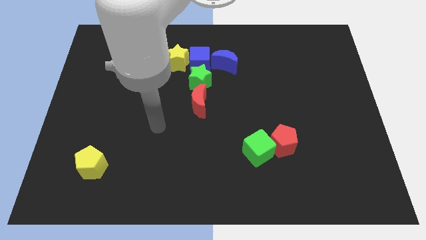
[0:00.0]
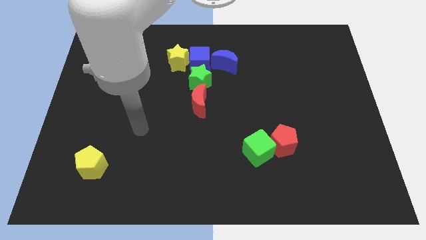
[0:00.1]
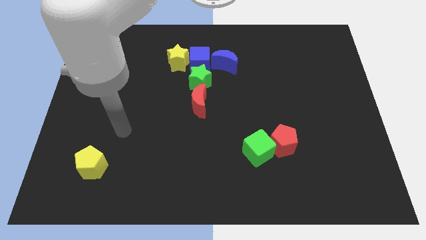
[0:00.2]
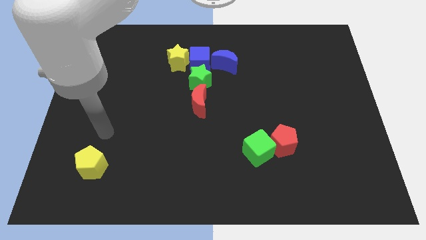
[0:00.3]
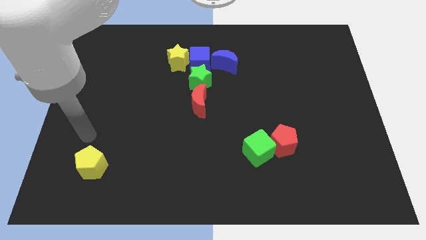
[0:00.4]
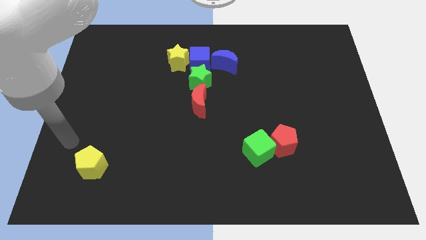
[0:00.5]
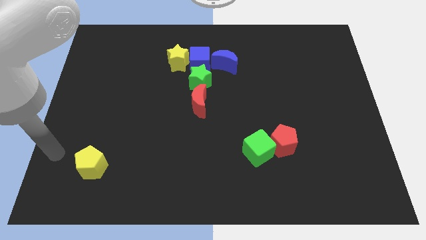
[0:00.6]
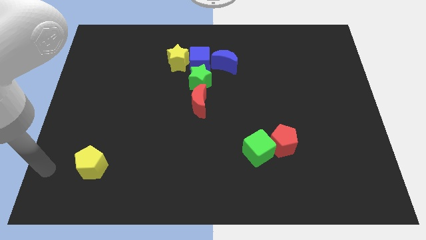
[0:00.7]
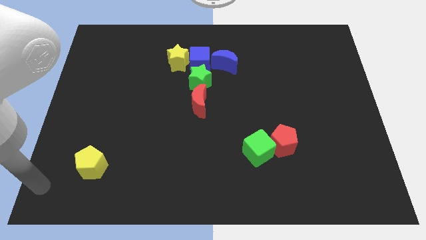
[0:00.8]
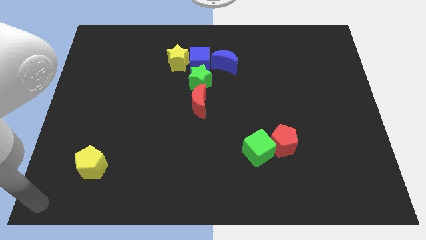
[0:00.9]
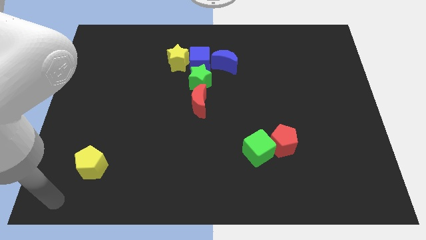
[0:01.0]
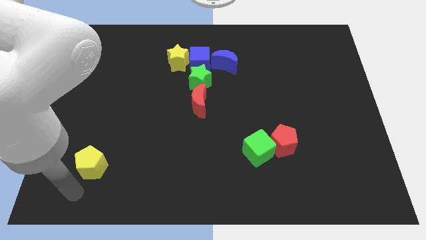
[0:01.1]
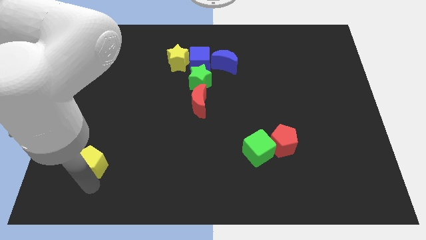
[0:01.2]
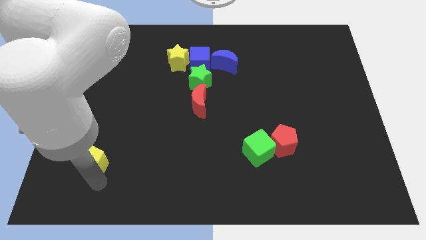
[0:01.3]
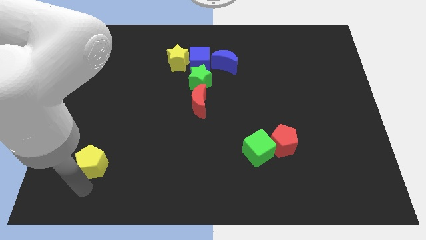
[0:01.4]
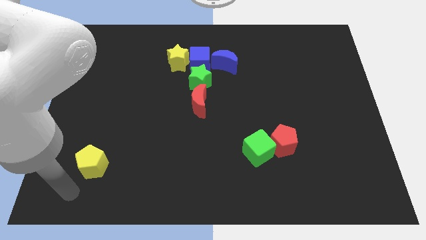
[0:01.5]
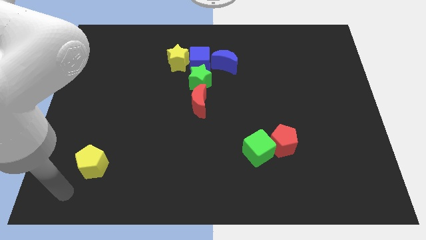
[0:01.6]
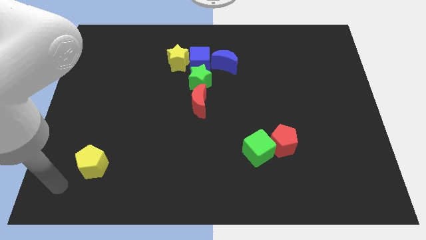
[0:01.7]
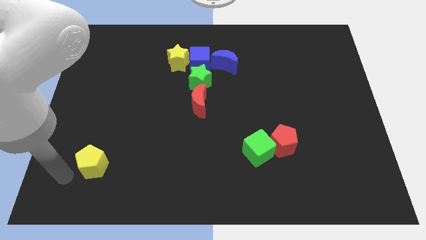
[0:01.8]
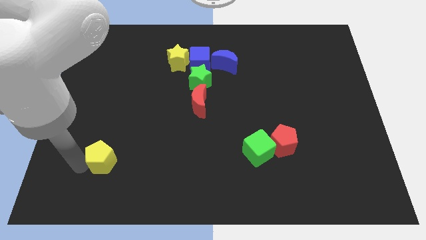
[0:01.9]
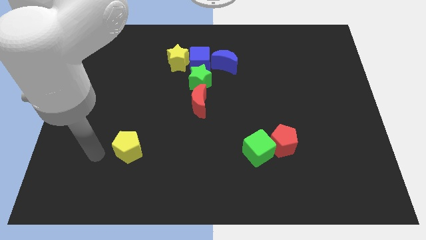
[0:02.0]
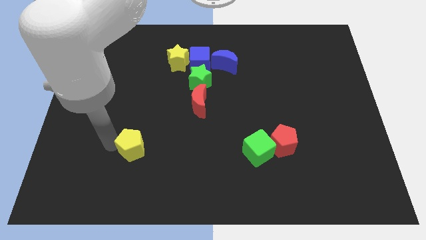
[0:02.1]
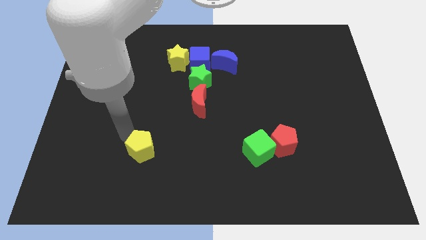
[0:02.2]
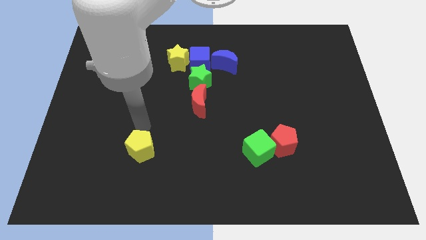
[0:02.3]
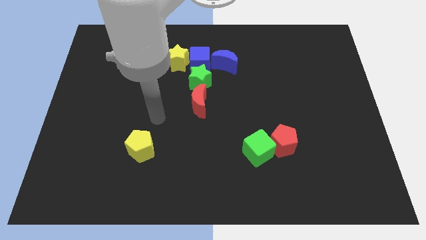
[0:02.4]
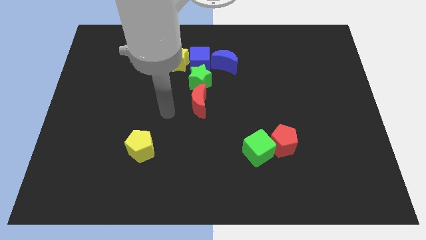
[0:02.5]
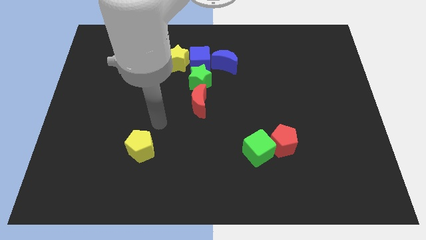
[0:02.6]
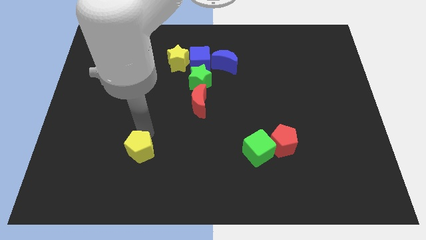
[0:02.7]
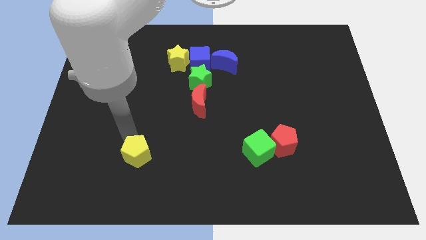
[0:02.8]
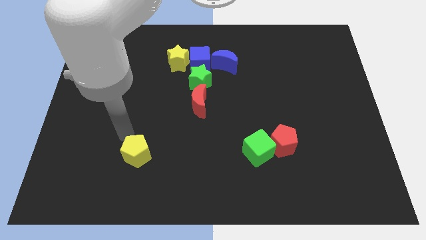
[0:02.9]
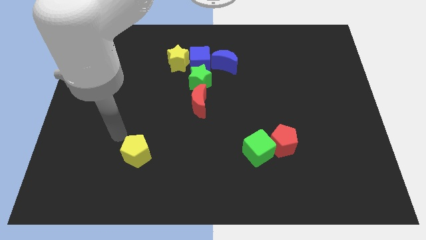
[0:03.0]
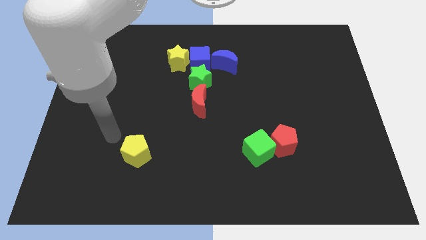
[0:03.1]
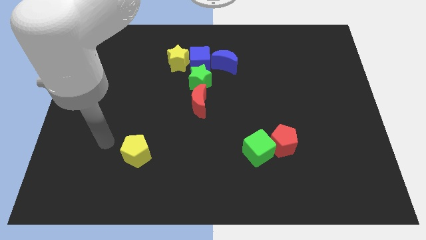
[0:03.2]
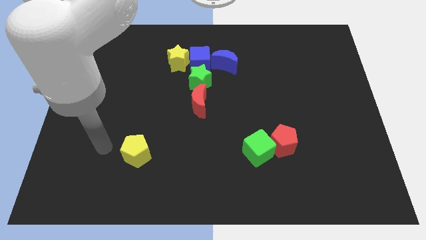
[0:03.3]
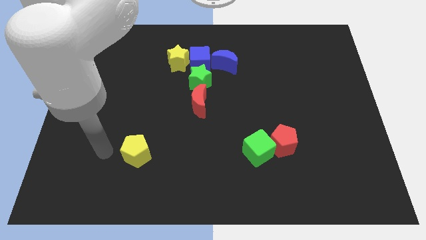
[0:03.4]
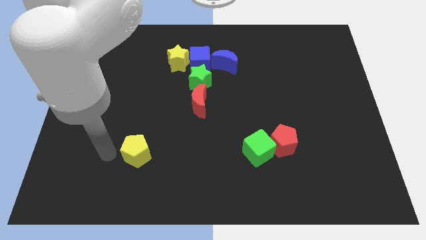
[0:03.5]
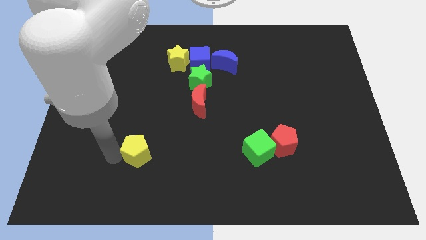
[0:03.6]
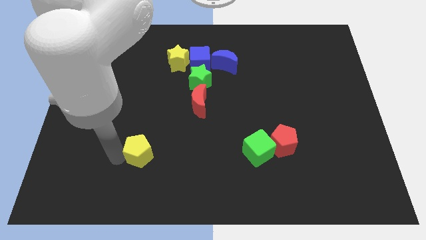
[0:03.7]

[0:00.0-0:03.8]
place the yellow pentagon parallel to the left of green cube

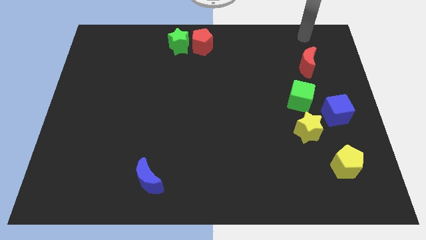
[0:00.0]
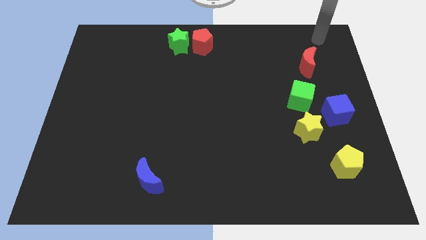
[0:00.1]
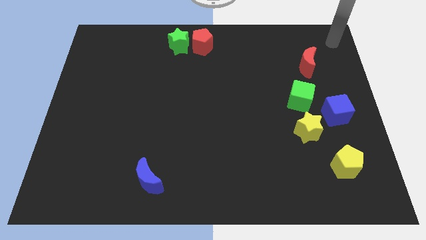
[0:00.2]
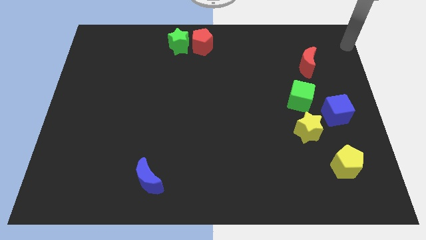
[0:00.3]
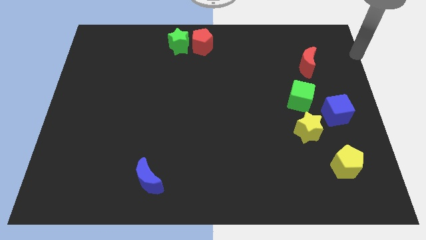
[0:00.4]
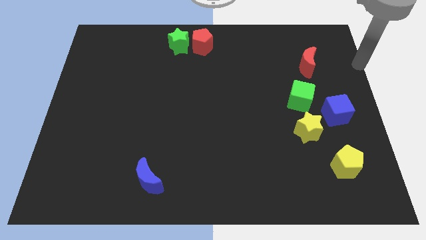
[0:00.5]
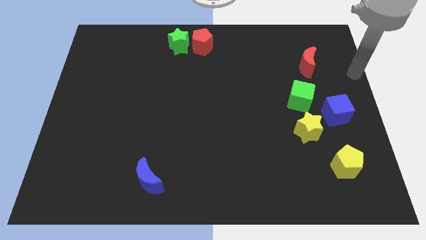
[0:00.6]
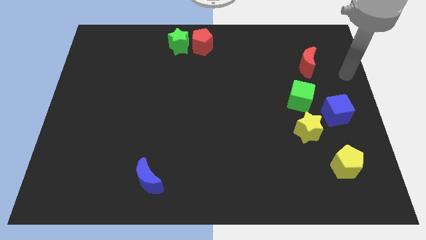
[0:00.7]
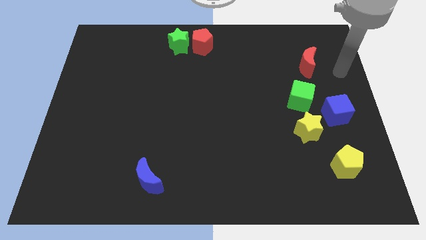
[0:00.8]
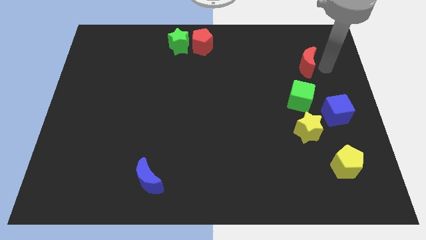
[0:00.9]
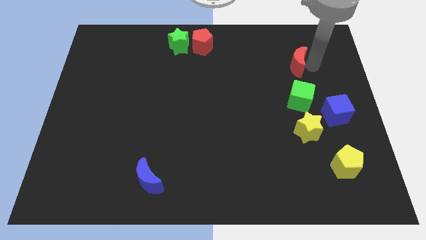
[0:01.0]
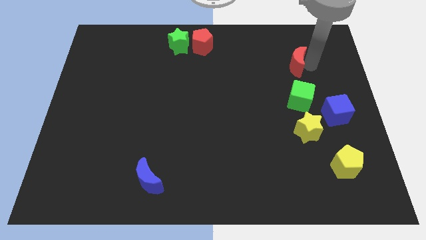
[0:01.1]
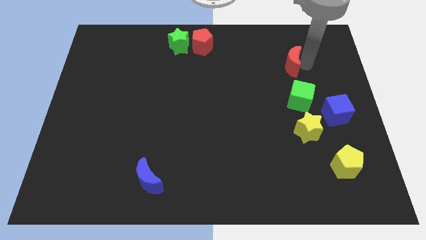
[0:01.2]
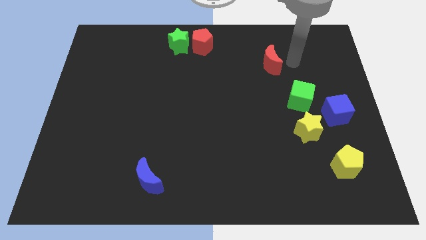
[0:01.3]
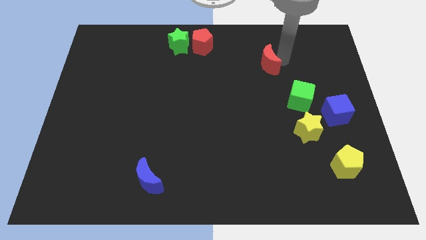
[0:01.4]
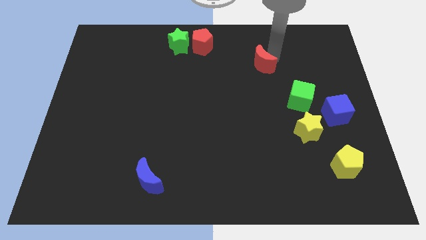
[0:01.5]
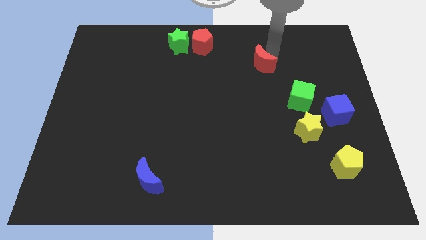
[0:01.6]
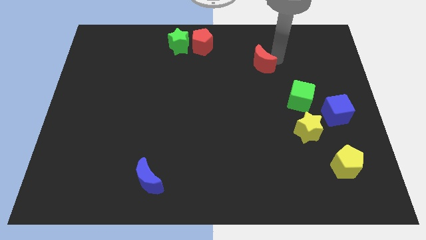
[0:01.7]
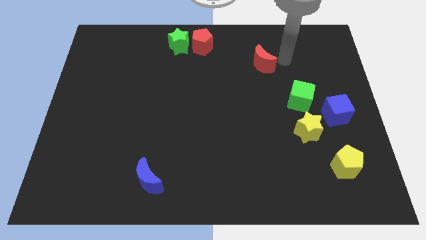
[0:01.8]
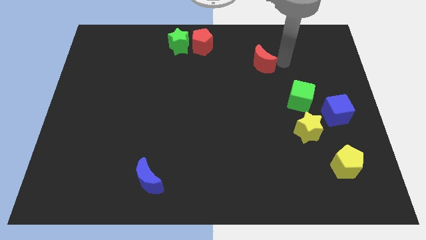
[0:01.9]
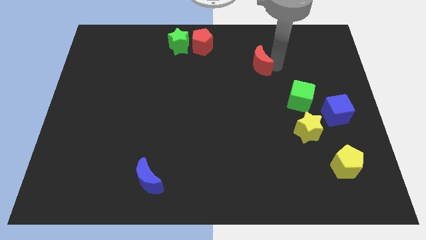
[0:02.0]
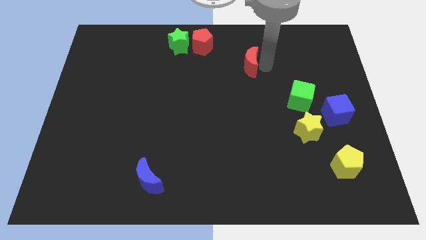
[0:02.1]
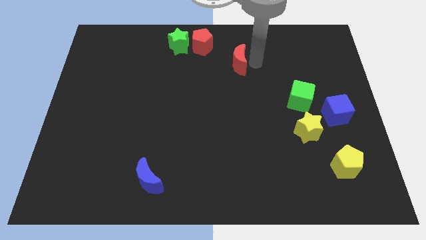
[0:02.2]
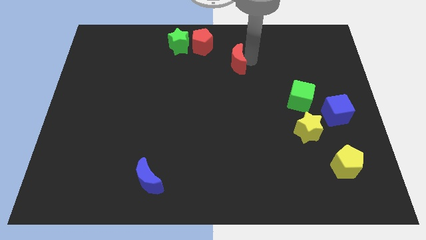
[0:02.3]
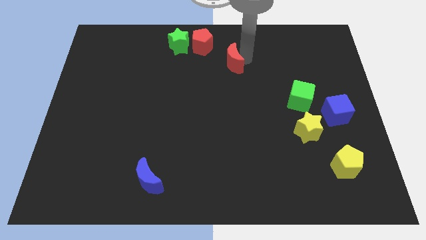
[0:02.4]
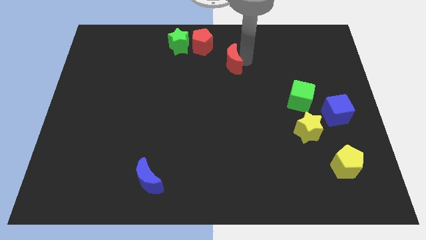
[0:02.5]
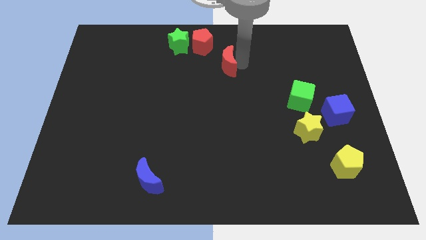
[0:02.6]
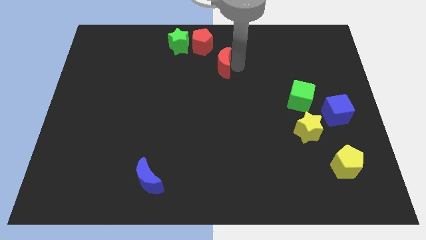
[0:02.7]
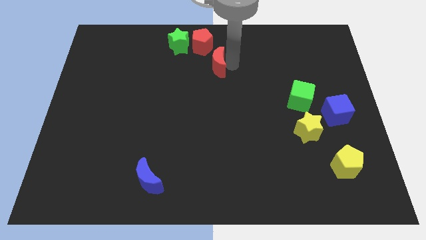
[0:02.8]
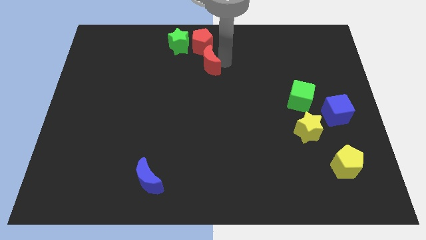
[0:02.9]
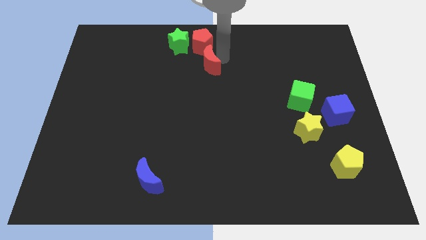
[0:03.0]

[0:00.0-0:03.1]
place red crescent below red pentagon

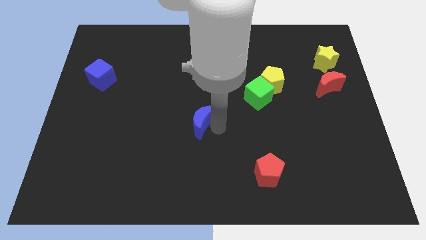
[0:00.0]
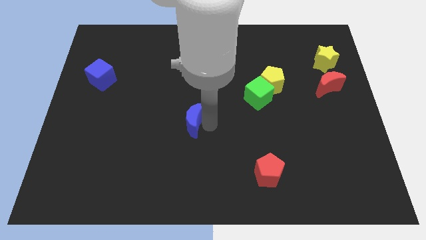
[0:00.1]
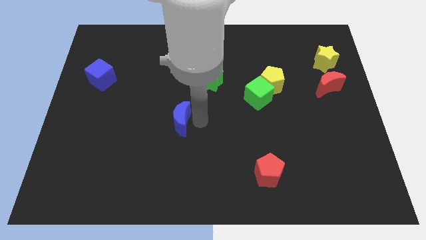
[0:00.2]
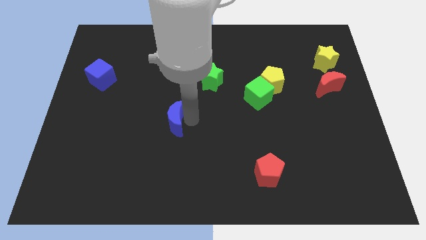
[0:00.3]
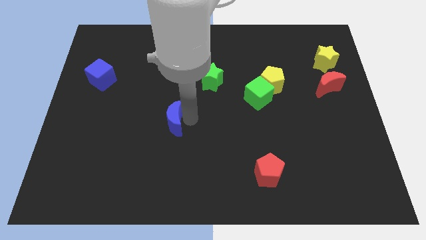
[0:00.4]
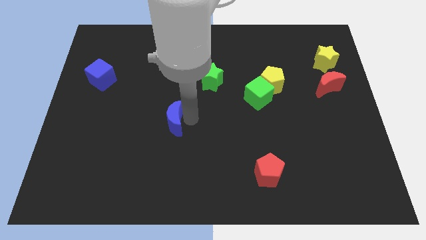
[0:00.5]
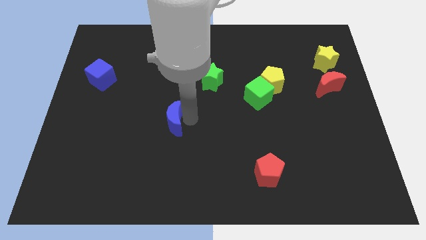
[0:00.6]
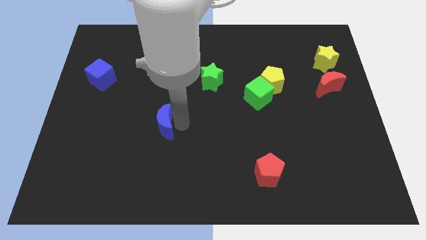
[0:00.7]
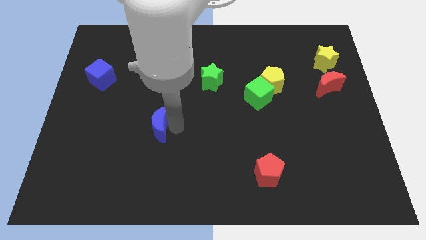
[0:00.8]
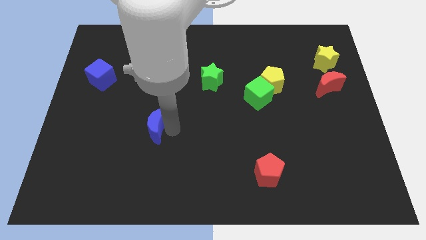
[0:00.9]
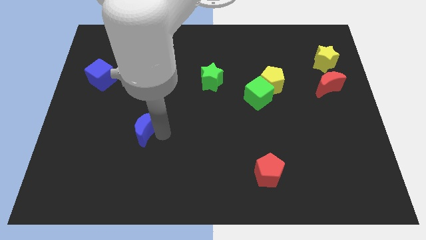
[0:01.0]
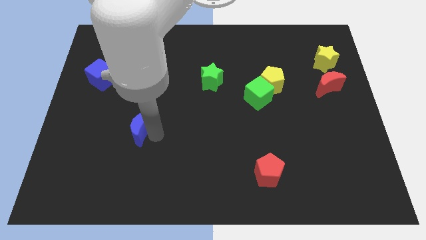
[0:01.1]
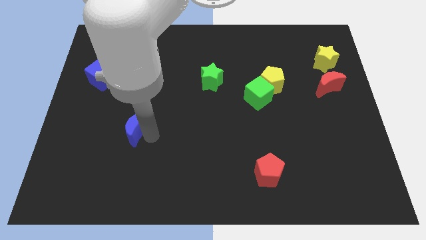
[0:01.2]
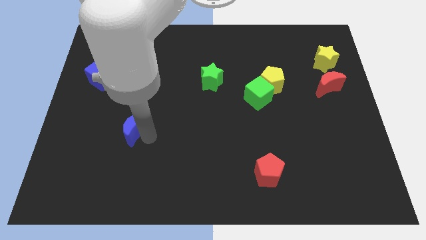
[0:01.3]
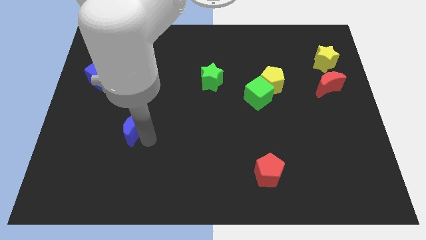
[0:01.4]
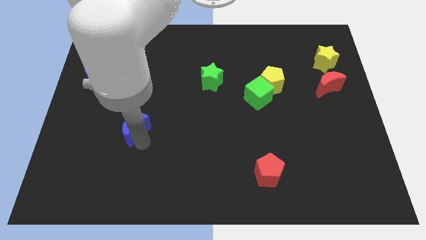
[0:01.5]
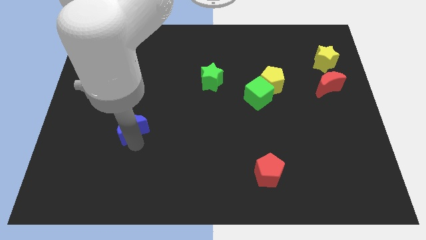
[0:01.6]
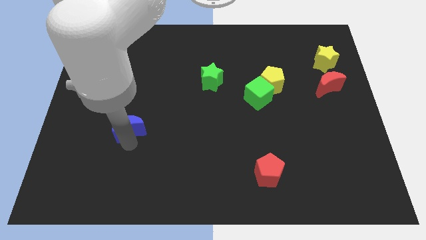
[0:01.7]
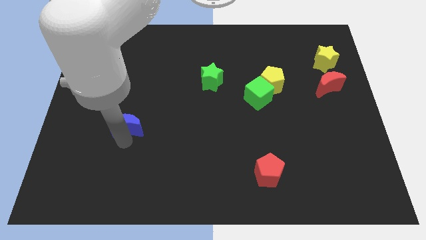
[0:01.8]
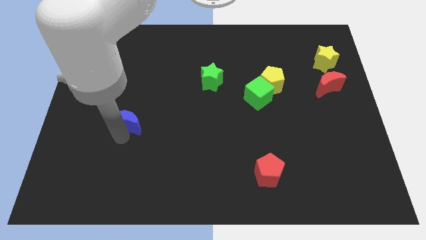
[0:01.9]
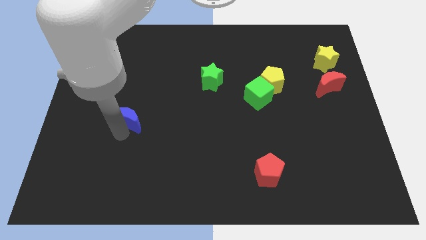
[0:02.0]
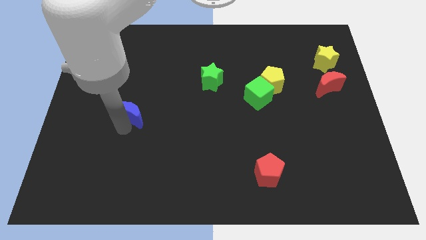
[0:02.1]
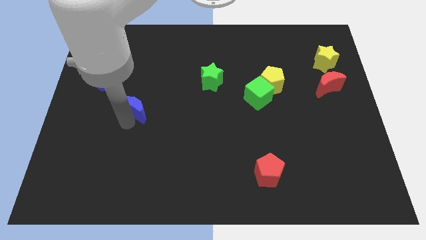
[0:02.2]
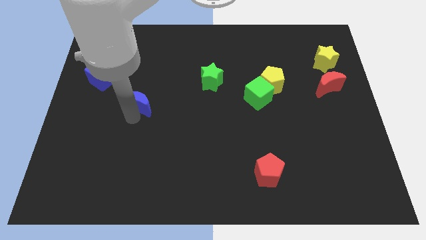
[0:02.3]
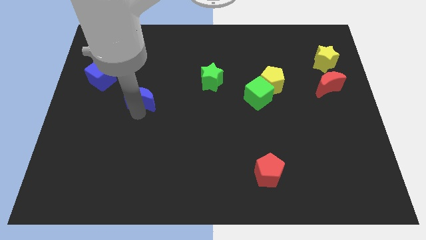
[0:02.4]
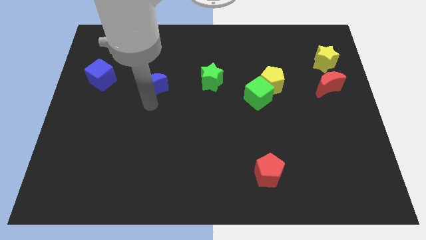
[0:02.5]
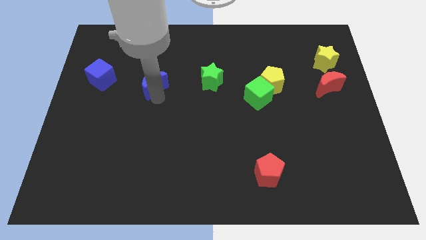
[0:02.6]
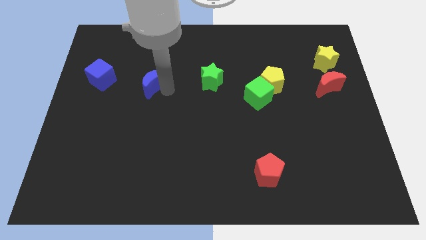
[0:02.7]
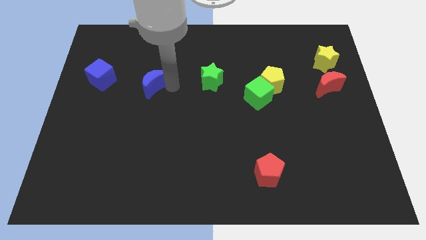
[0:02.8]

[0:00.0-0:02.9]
move the blue crescent to the left of the green cube
